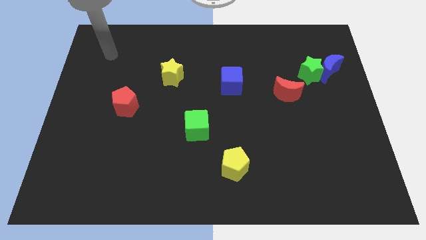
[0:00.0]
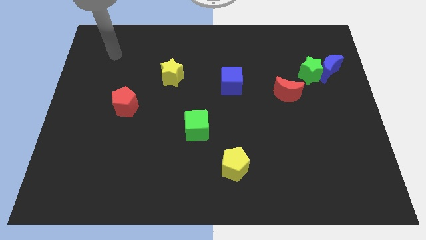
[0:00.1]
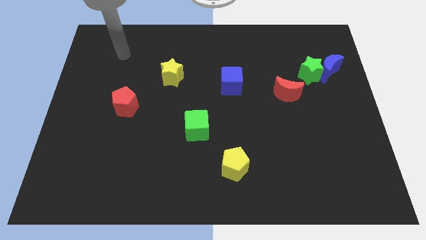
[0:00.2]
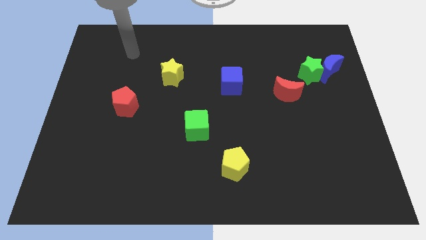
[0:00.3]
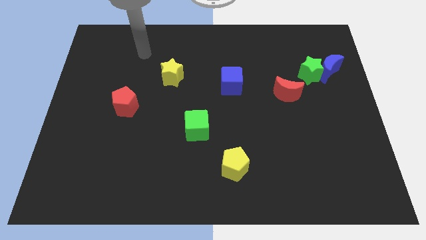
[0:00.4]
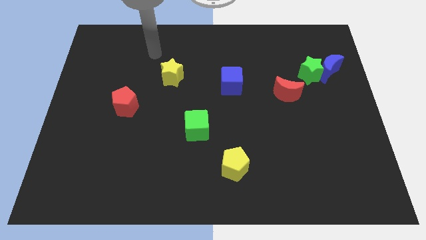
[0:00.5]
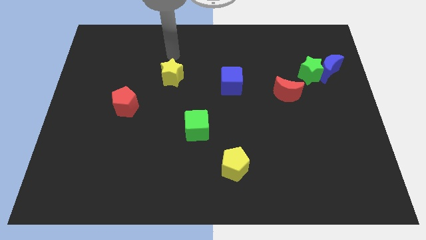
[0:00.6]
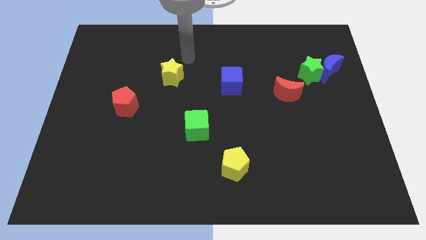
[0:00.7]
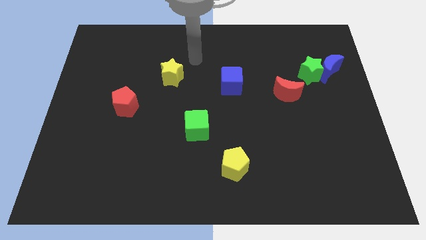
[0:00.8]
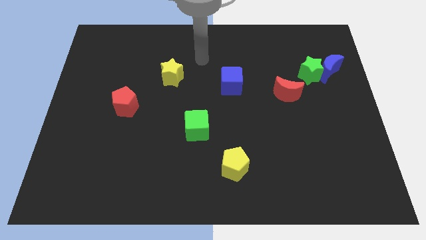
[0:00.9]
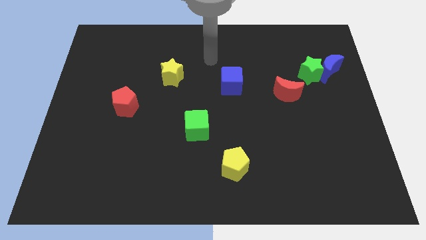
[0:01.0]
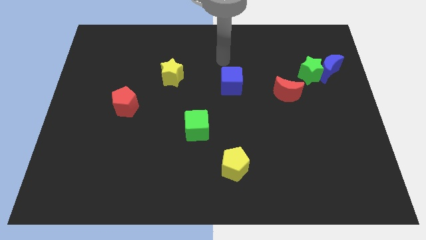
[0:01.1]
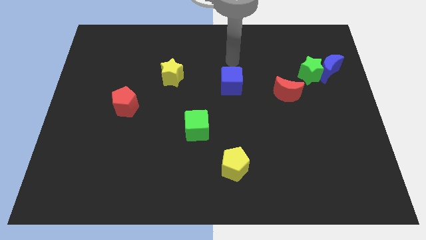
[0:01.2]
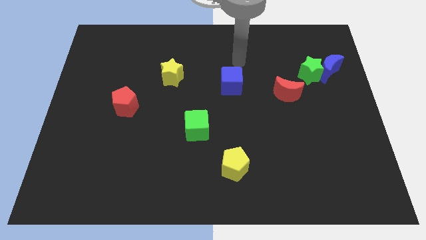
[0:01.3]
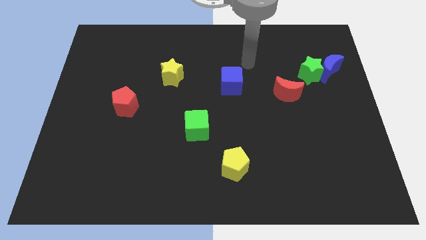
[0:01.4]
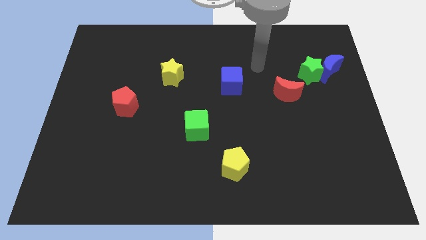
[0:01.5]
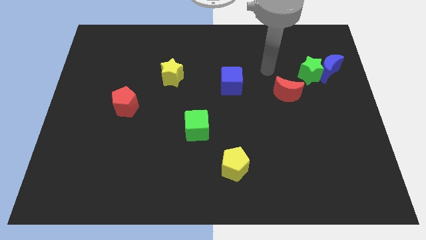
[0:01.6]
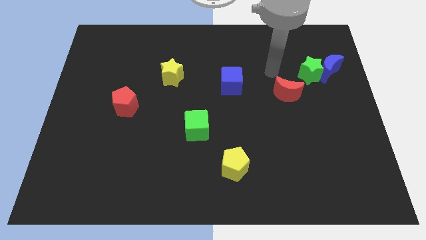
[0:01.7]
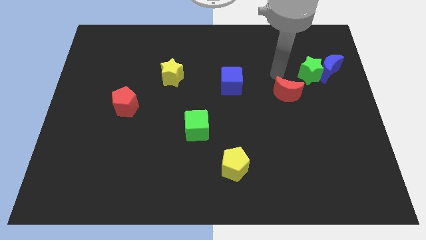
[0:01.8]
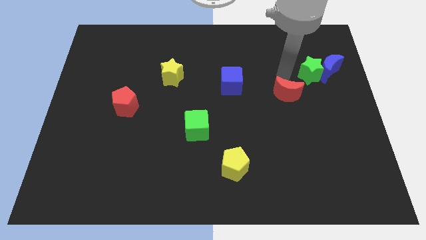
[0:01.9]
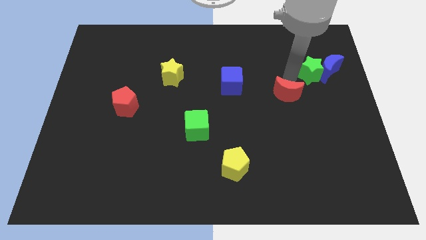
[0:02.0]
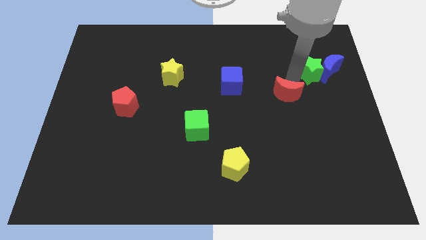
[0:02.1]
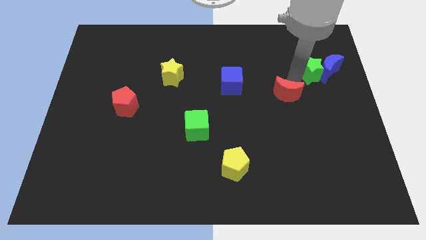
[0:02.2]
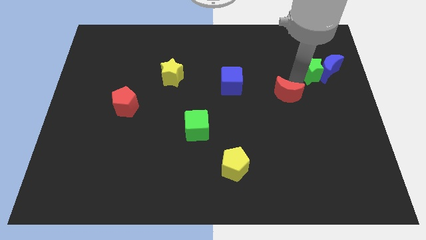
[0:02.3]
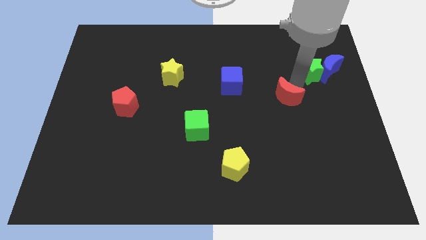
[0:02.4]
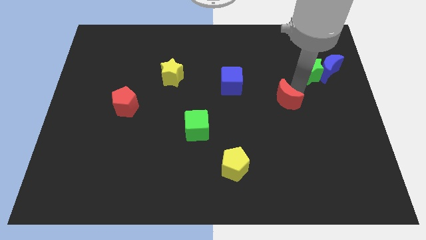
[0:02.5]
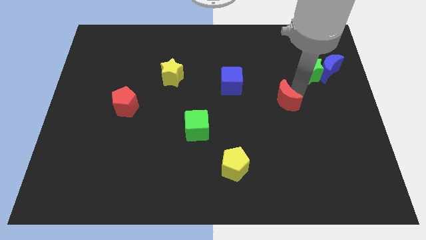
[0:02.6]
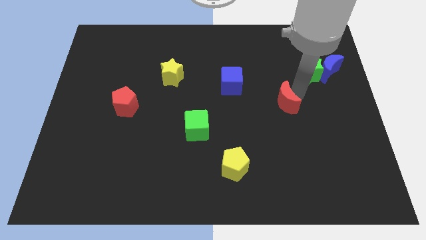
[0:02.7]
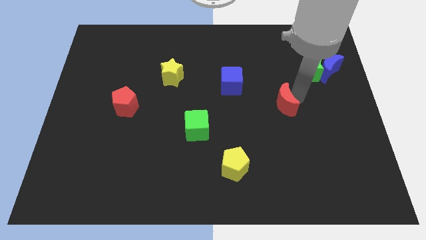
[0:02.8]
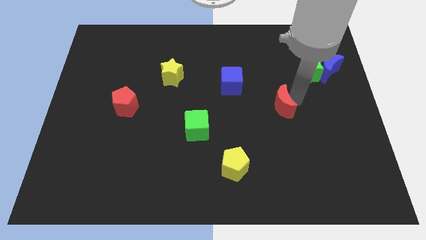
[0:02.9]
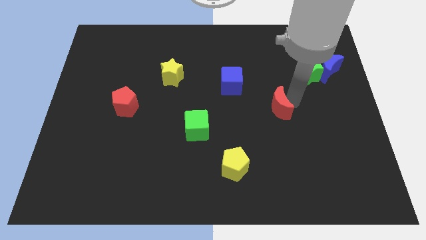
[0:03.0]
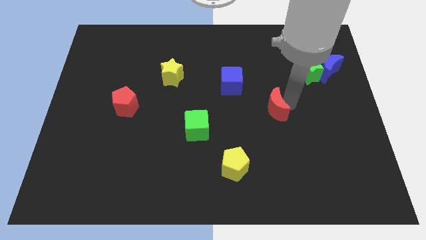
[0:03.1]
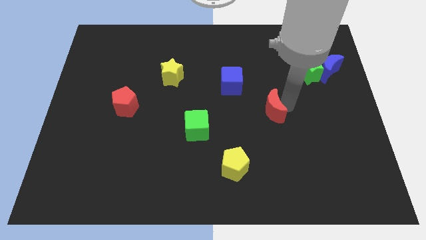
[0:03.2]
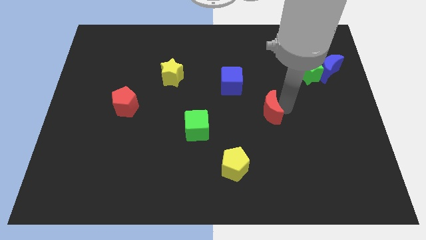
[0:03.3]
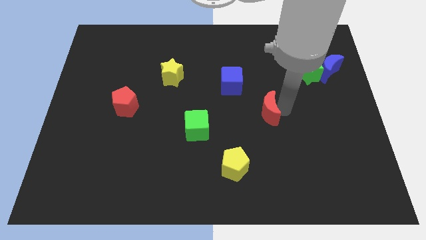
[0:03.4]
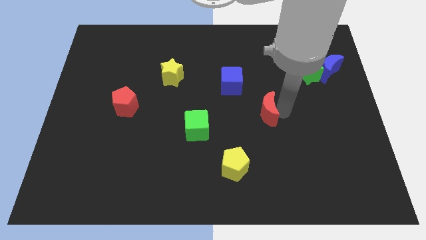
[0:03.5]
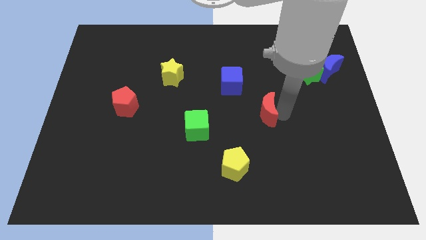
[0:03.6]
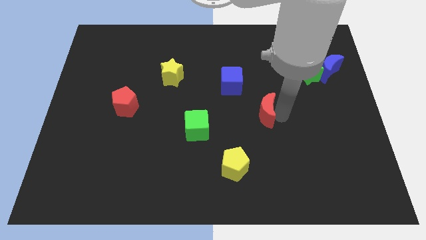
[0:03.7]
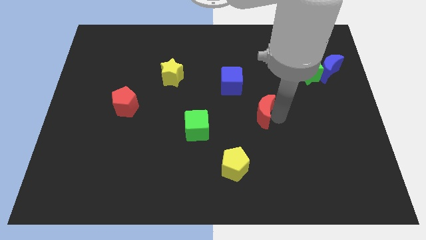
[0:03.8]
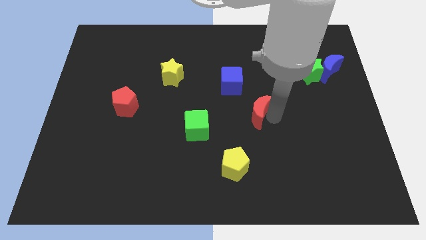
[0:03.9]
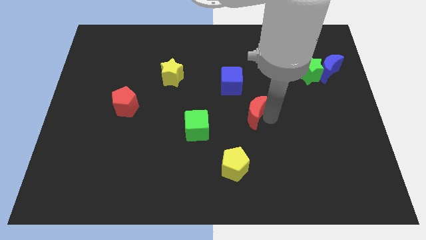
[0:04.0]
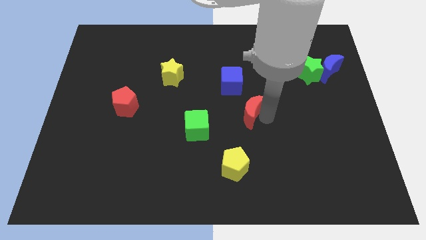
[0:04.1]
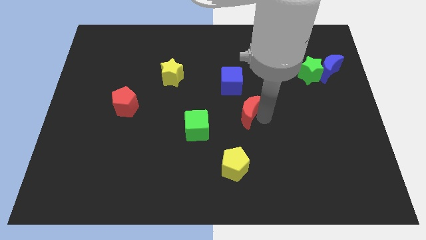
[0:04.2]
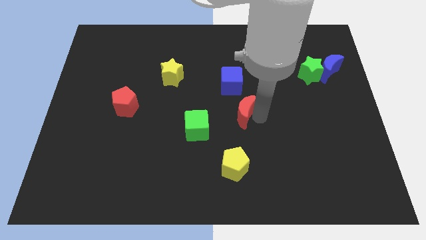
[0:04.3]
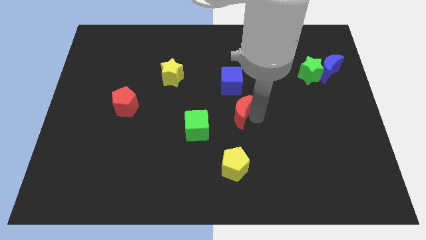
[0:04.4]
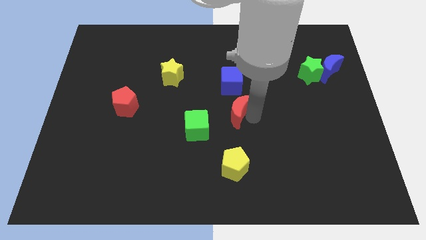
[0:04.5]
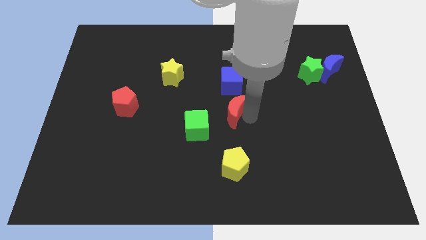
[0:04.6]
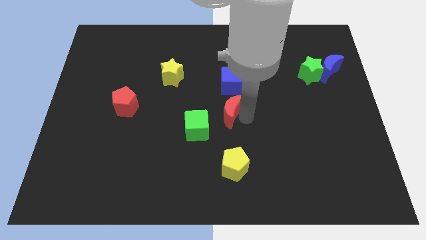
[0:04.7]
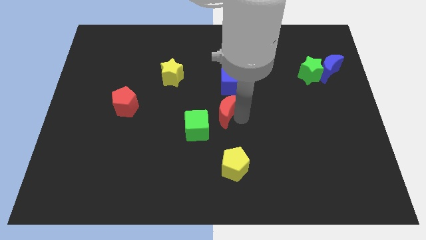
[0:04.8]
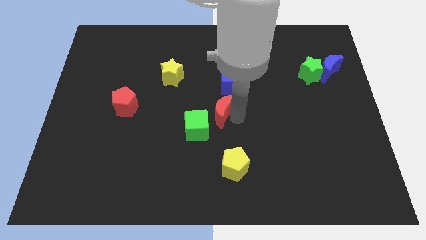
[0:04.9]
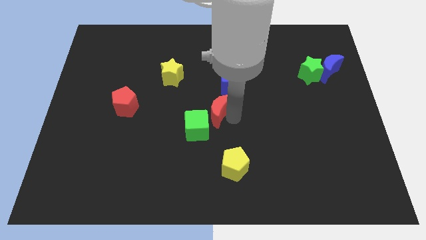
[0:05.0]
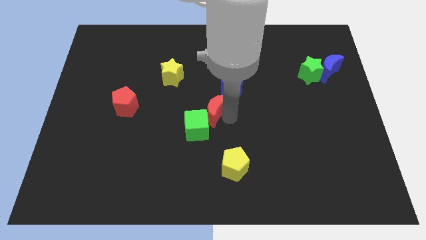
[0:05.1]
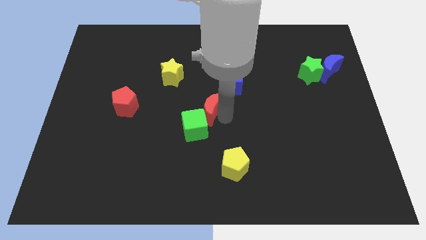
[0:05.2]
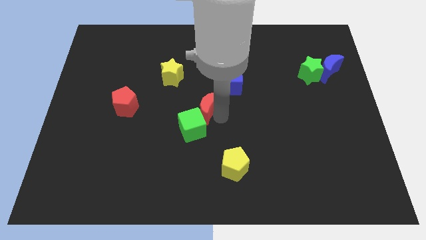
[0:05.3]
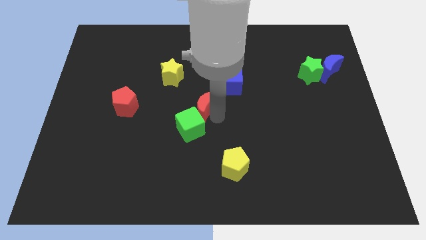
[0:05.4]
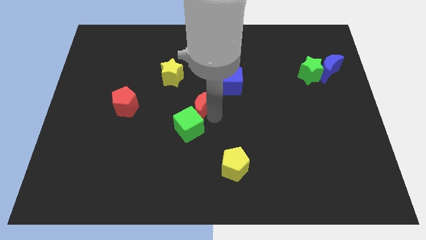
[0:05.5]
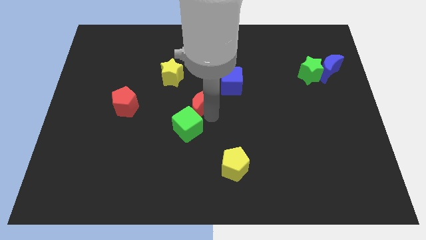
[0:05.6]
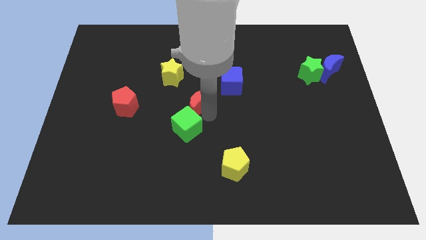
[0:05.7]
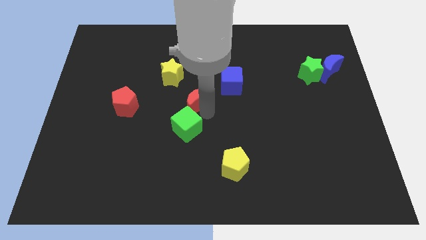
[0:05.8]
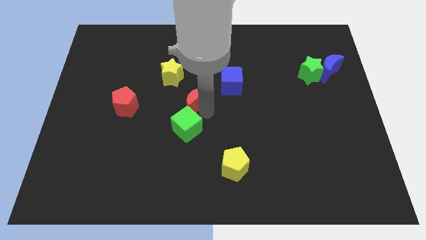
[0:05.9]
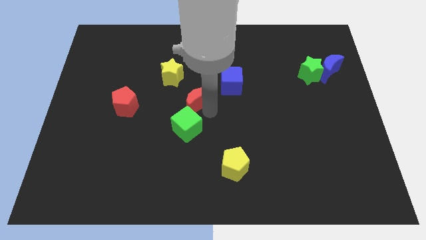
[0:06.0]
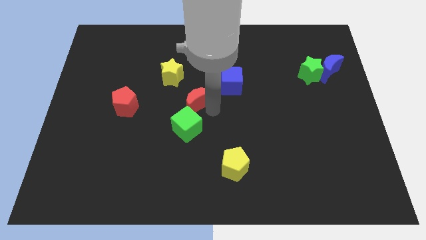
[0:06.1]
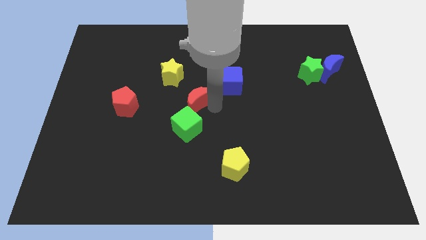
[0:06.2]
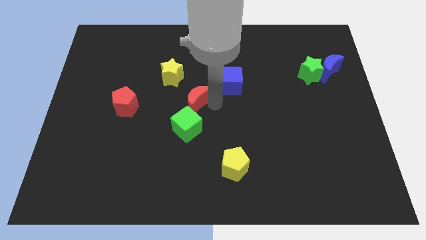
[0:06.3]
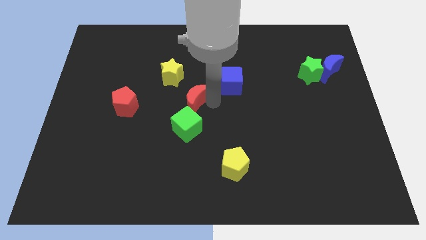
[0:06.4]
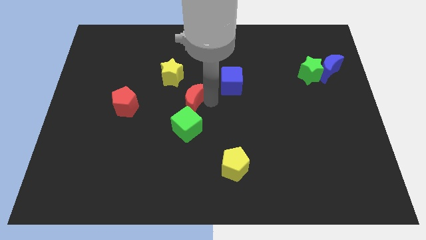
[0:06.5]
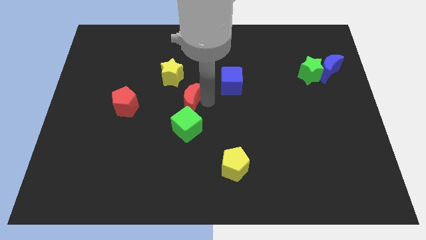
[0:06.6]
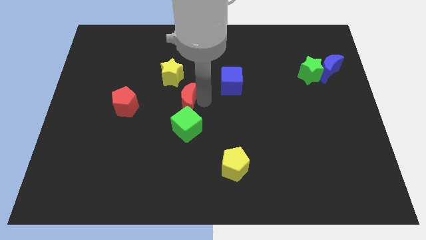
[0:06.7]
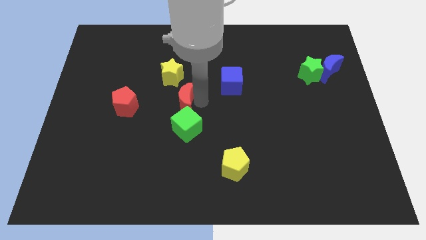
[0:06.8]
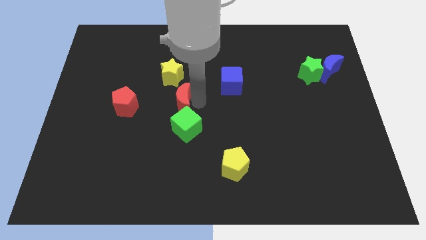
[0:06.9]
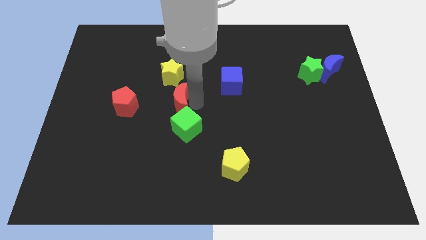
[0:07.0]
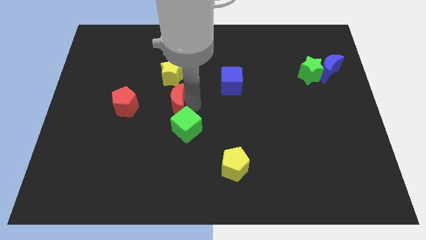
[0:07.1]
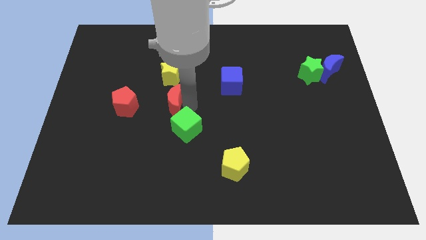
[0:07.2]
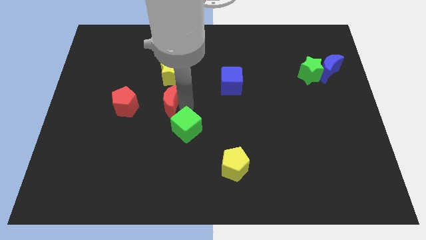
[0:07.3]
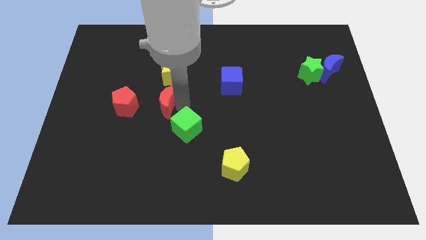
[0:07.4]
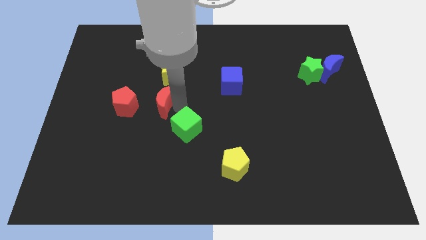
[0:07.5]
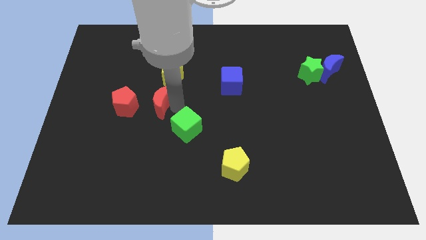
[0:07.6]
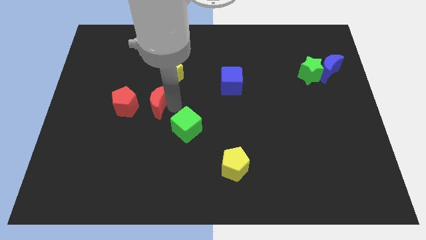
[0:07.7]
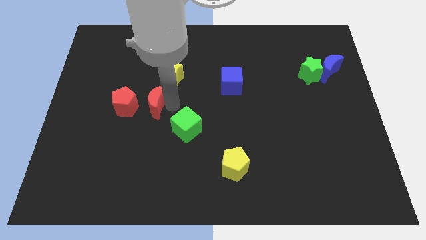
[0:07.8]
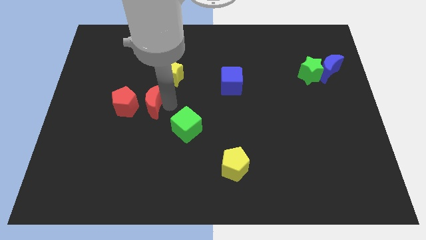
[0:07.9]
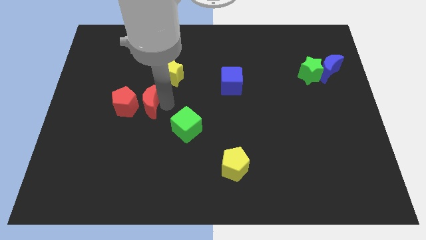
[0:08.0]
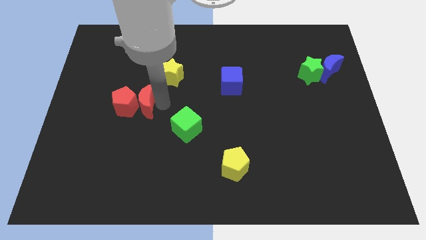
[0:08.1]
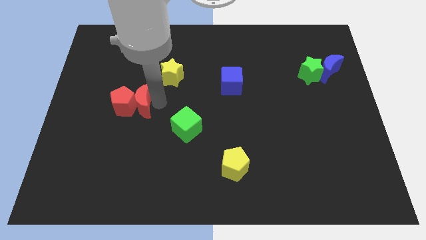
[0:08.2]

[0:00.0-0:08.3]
put the red moon next to the red pentagon

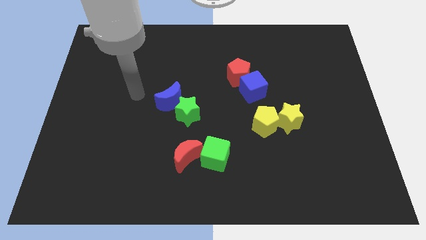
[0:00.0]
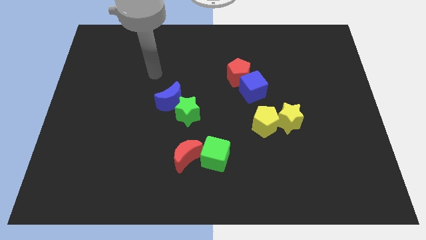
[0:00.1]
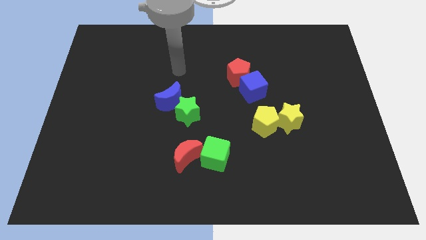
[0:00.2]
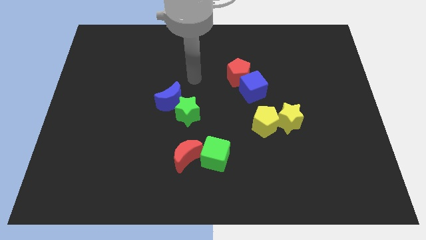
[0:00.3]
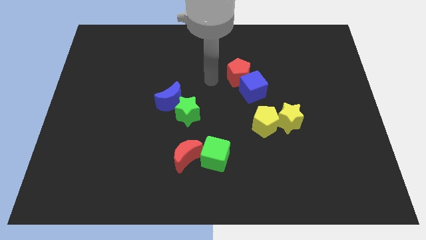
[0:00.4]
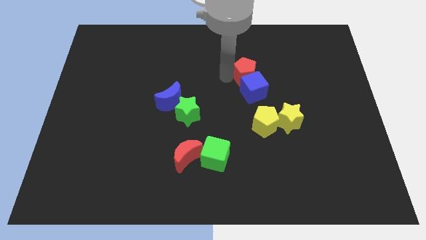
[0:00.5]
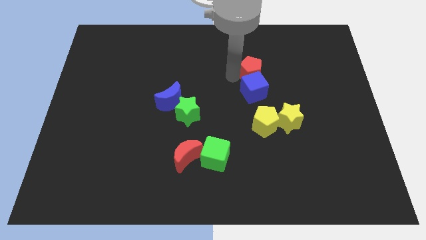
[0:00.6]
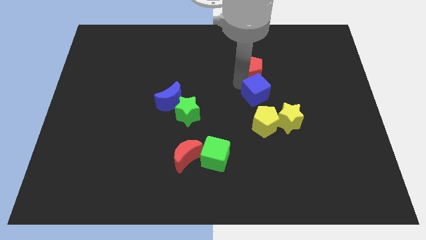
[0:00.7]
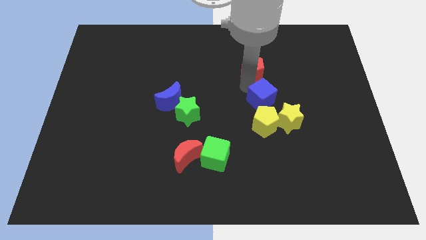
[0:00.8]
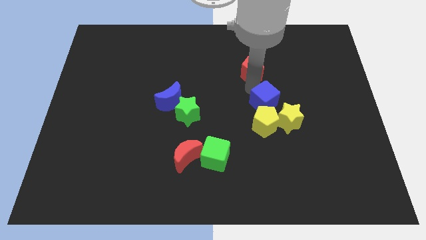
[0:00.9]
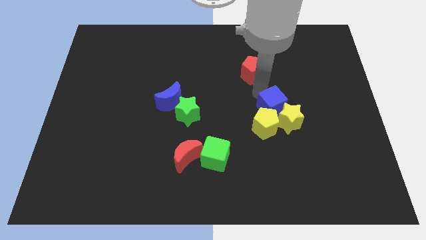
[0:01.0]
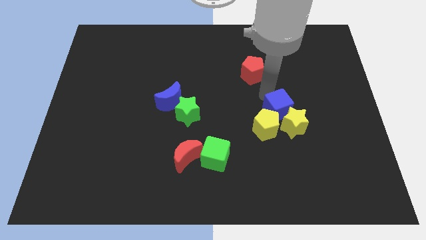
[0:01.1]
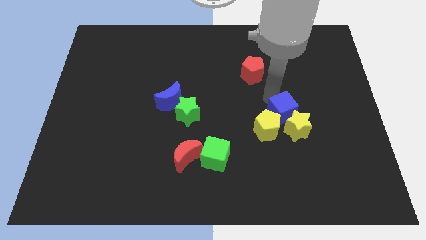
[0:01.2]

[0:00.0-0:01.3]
move the blue cube next to the yellow star
